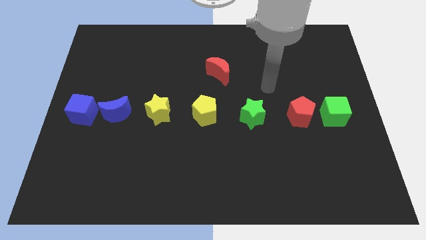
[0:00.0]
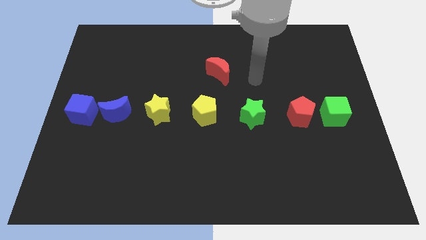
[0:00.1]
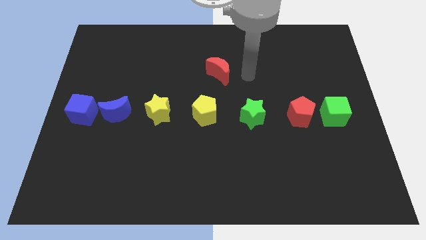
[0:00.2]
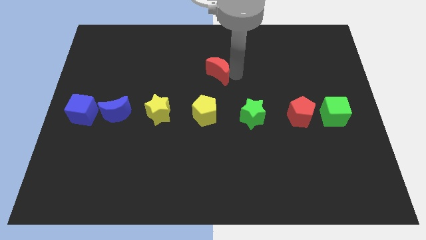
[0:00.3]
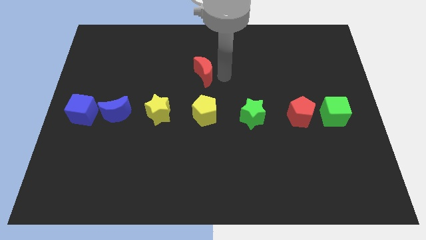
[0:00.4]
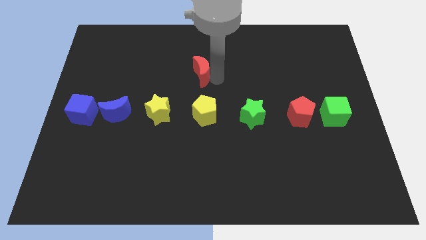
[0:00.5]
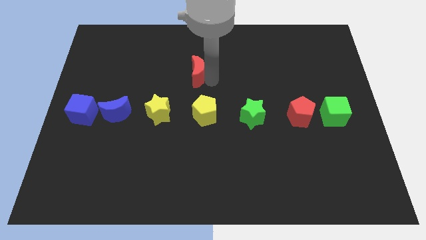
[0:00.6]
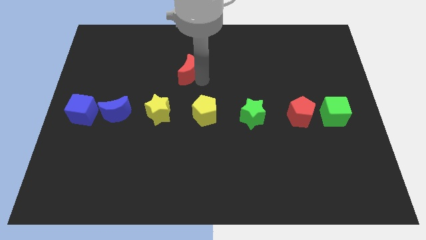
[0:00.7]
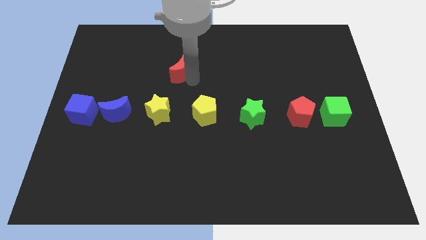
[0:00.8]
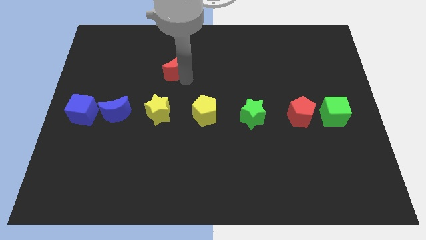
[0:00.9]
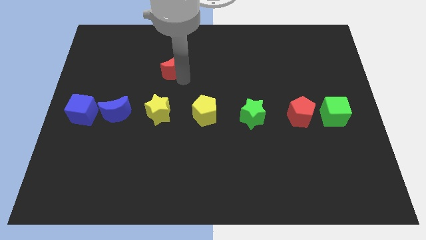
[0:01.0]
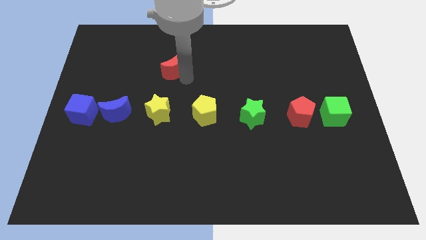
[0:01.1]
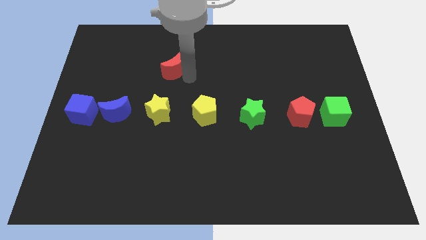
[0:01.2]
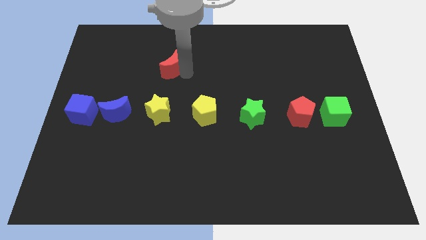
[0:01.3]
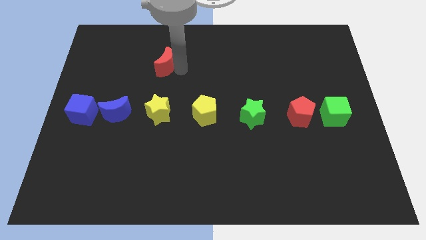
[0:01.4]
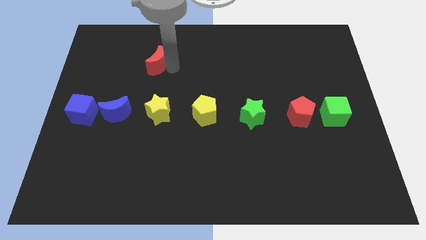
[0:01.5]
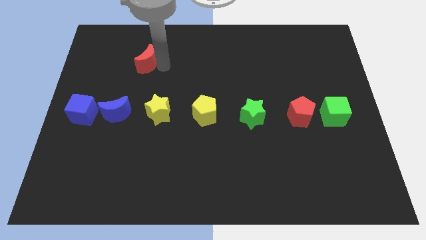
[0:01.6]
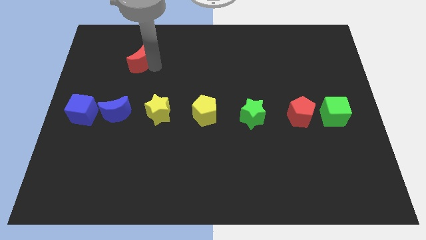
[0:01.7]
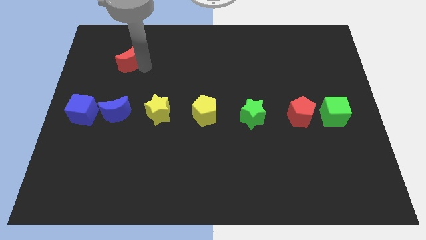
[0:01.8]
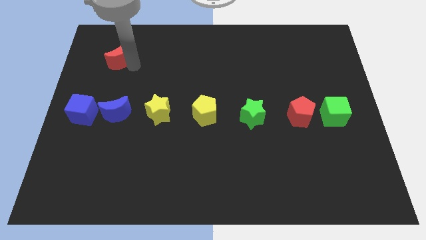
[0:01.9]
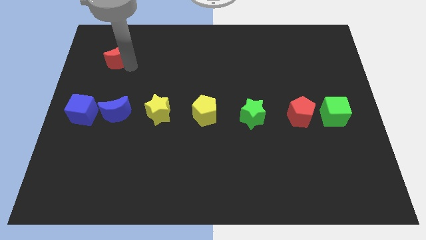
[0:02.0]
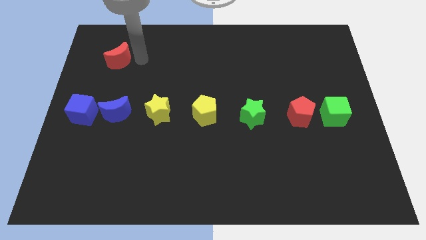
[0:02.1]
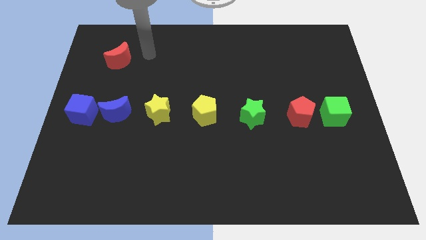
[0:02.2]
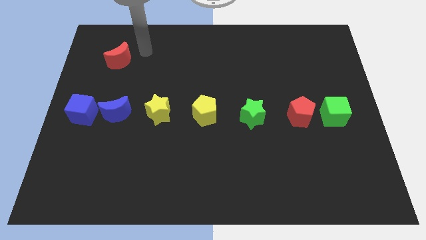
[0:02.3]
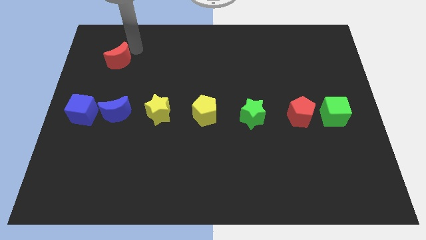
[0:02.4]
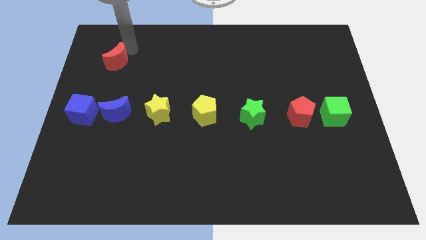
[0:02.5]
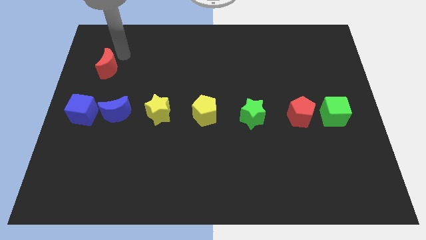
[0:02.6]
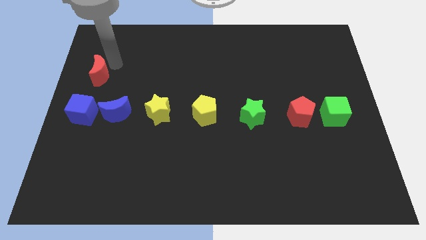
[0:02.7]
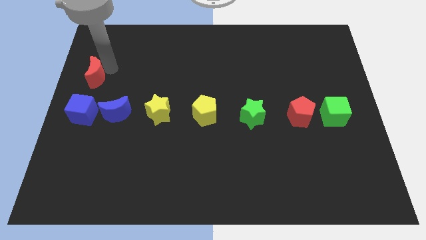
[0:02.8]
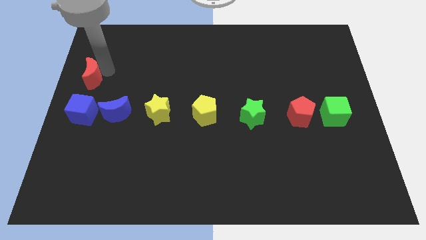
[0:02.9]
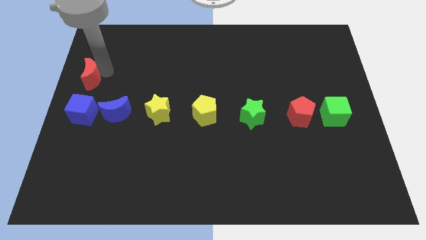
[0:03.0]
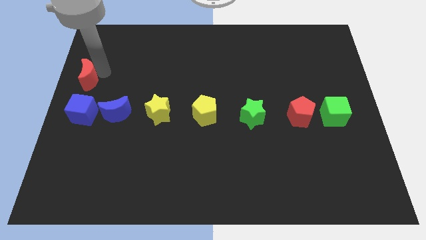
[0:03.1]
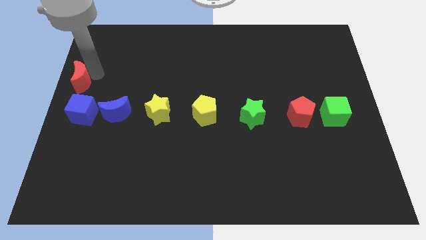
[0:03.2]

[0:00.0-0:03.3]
move the red moon to the top side of the blue crescent

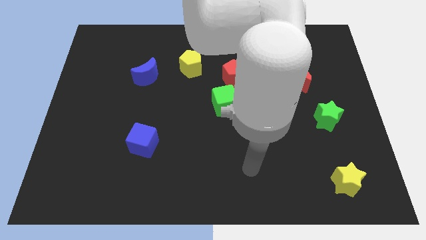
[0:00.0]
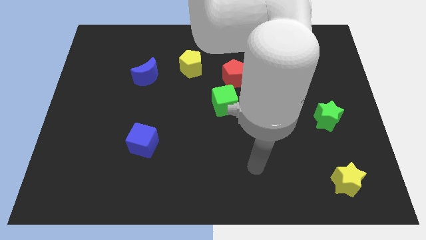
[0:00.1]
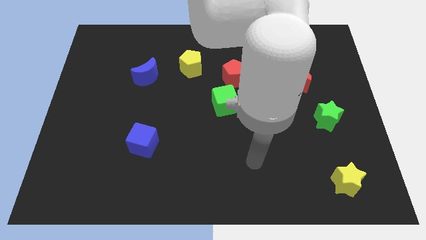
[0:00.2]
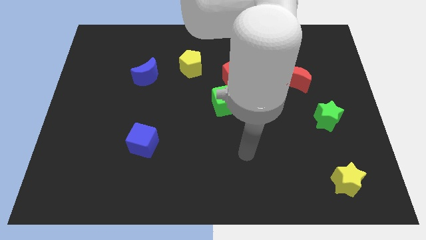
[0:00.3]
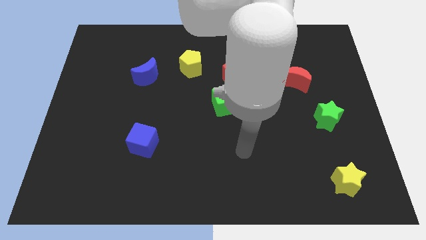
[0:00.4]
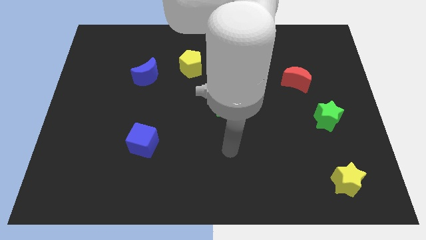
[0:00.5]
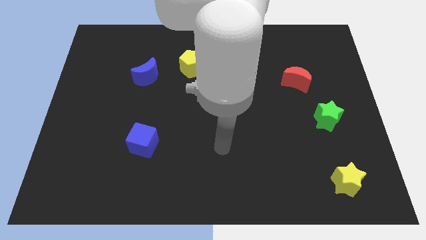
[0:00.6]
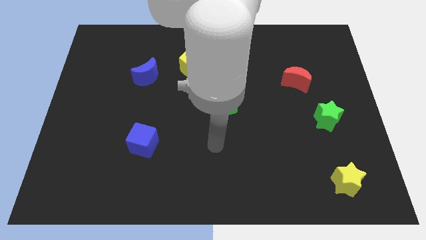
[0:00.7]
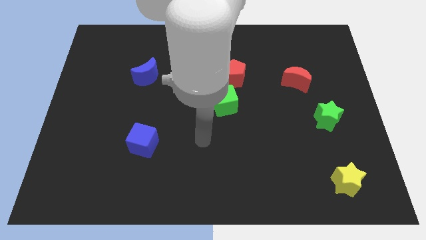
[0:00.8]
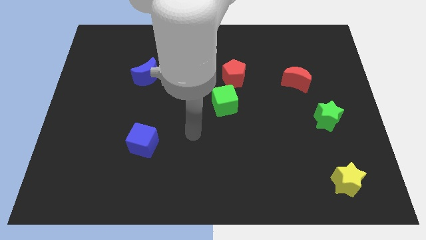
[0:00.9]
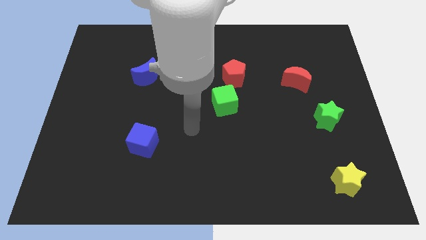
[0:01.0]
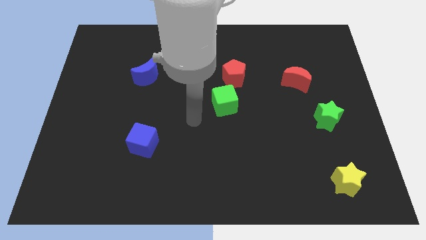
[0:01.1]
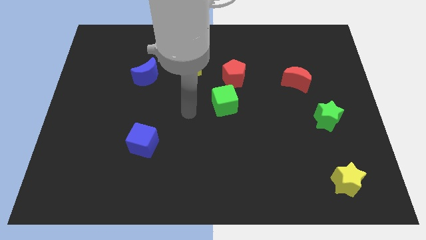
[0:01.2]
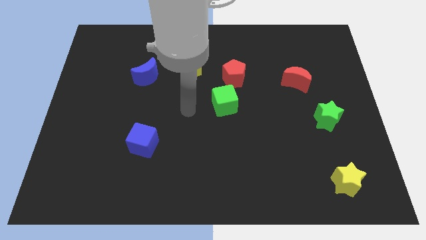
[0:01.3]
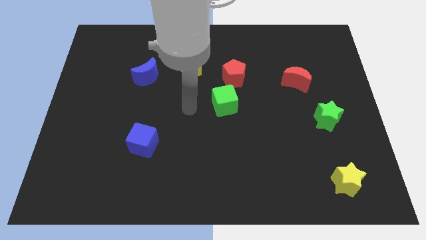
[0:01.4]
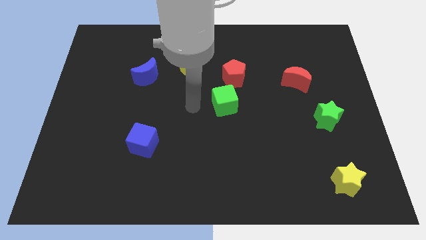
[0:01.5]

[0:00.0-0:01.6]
point your arm at the left of the green cube

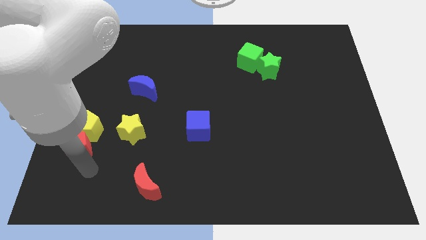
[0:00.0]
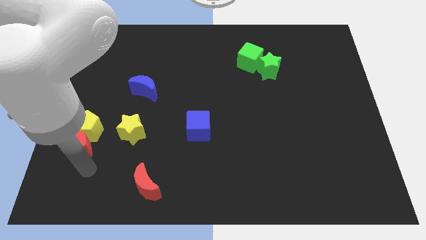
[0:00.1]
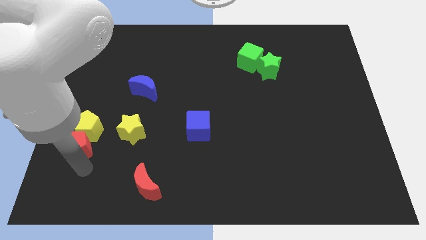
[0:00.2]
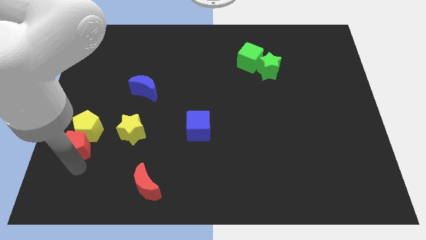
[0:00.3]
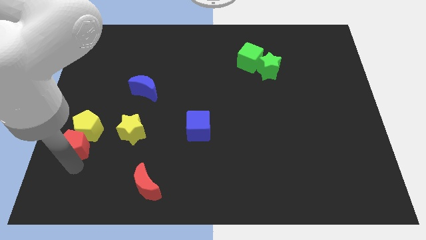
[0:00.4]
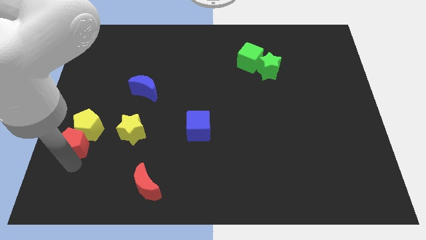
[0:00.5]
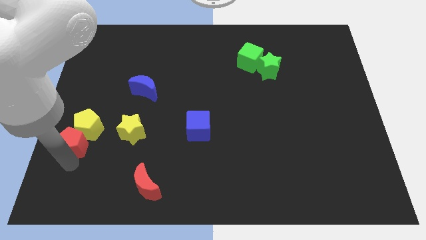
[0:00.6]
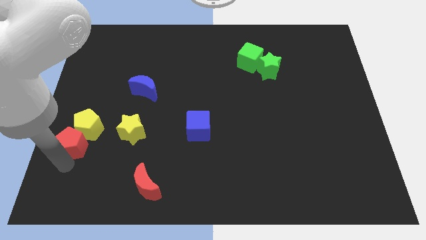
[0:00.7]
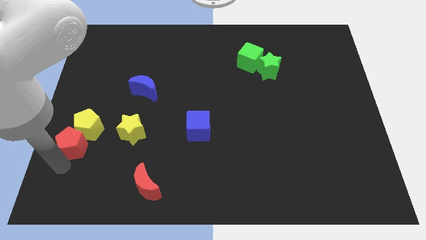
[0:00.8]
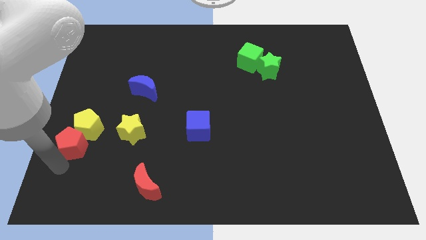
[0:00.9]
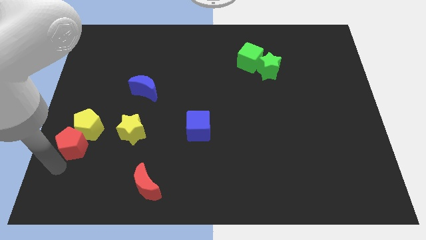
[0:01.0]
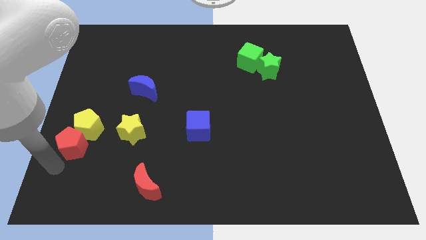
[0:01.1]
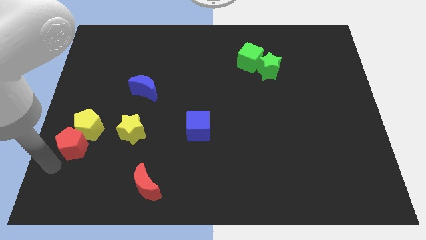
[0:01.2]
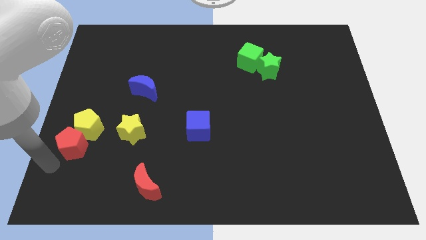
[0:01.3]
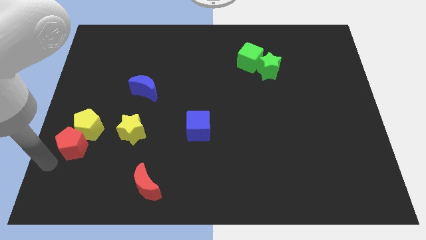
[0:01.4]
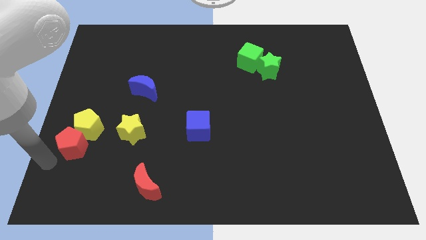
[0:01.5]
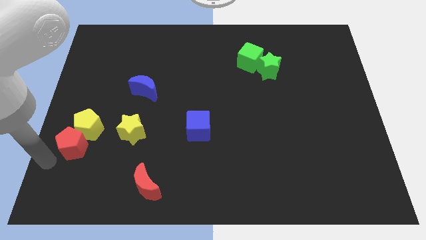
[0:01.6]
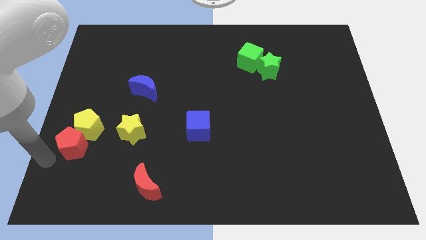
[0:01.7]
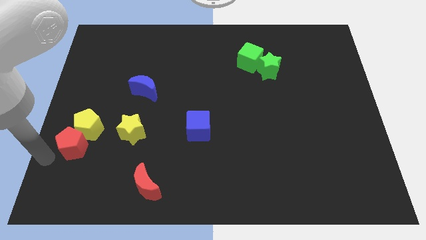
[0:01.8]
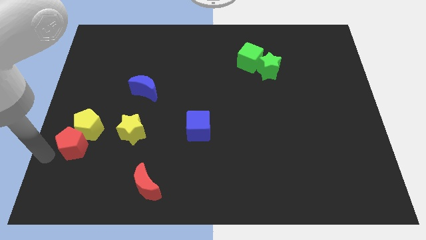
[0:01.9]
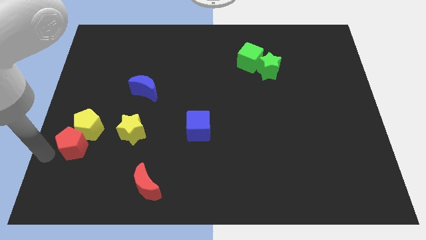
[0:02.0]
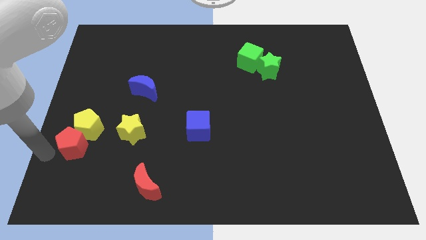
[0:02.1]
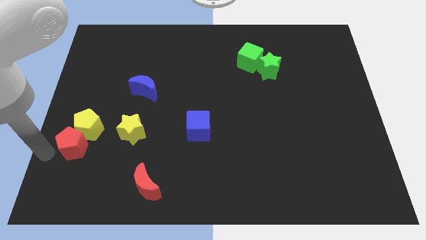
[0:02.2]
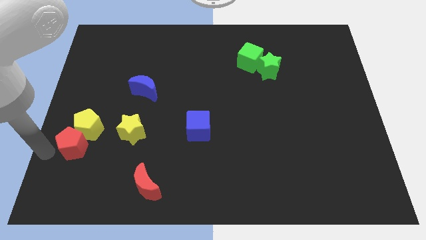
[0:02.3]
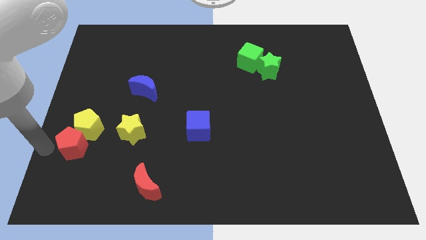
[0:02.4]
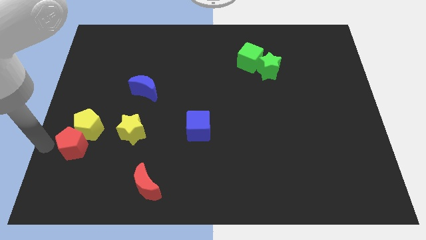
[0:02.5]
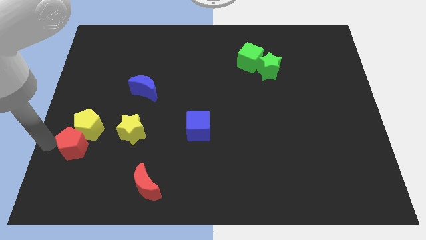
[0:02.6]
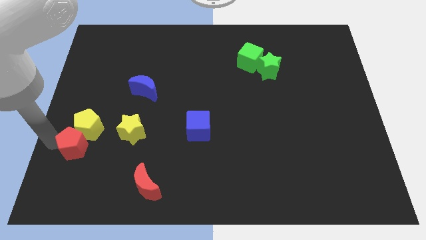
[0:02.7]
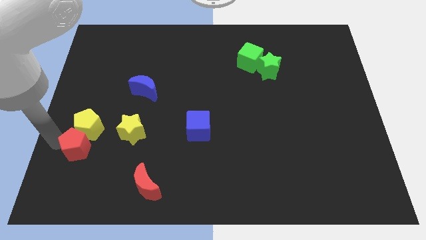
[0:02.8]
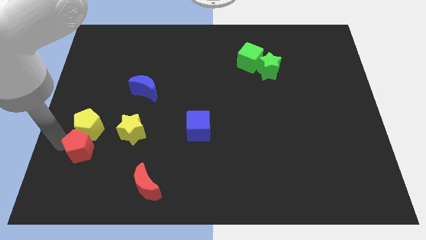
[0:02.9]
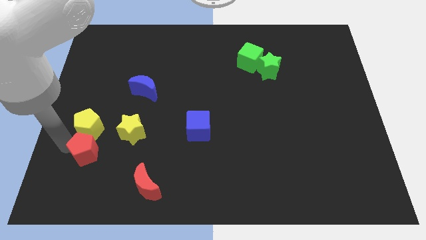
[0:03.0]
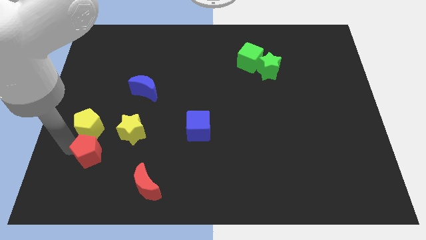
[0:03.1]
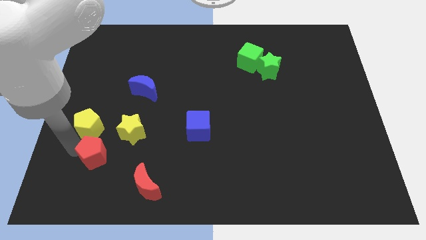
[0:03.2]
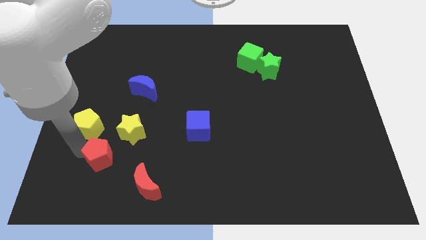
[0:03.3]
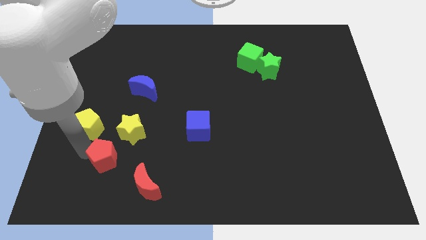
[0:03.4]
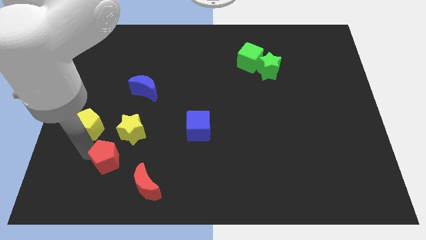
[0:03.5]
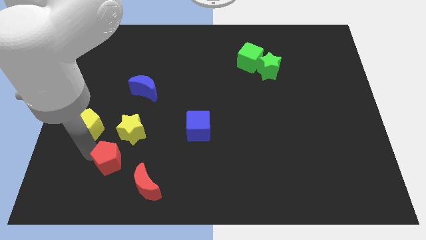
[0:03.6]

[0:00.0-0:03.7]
separate red pentagon from the yellow pentagon
